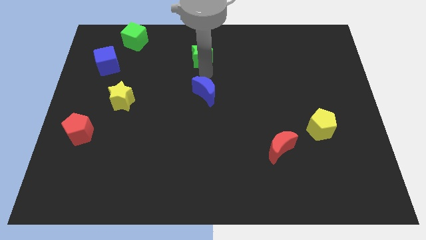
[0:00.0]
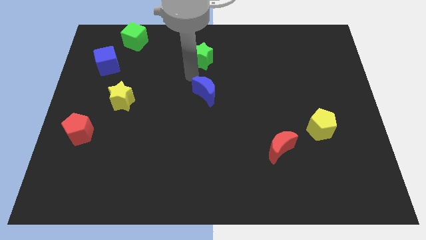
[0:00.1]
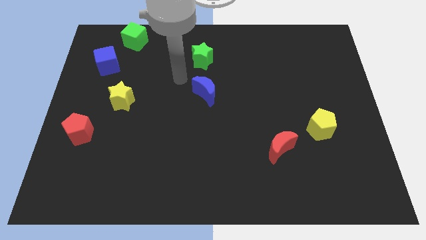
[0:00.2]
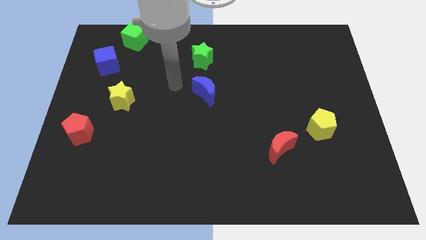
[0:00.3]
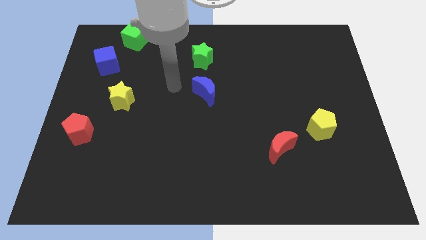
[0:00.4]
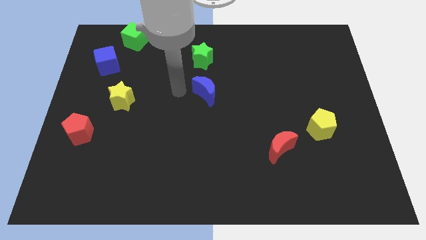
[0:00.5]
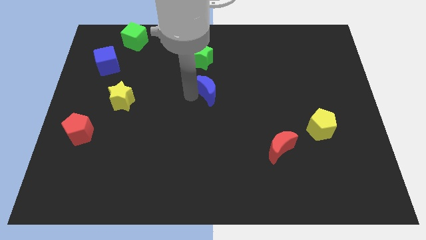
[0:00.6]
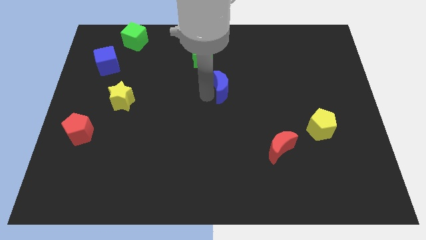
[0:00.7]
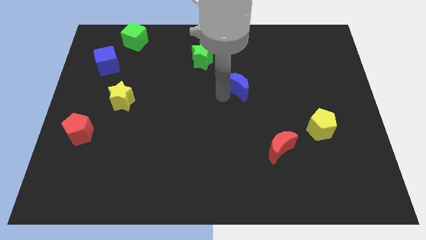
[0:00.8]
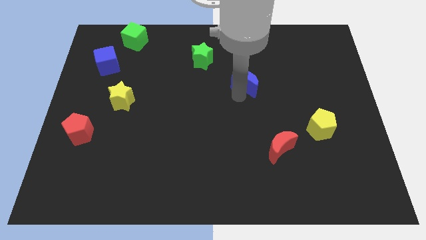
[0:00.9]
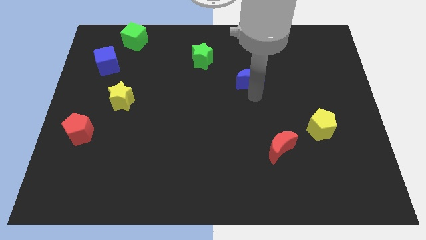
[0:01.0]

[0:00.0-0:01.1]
move blue moon to the bottom right of green star

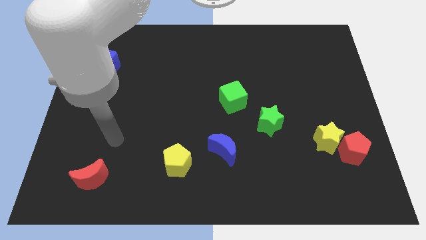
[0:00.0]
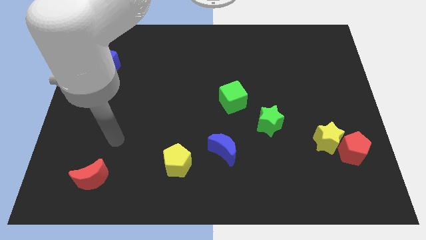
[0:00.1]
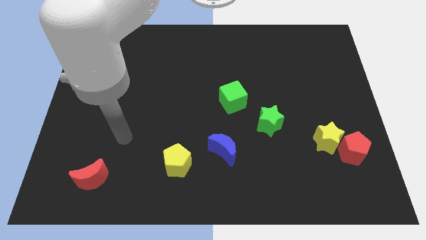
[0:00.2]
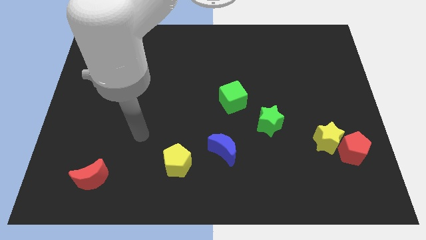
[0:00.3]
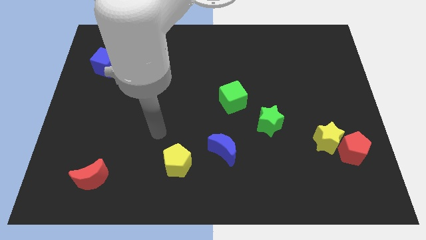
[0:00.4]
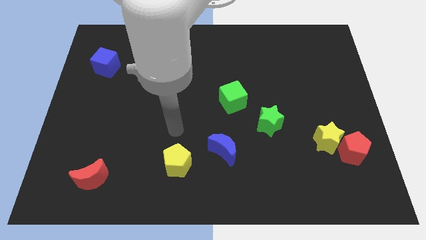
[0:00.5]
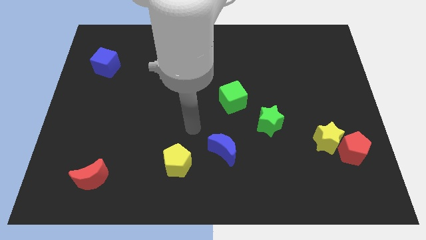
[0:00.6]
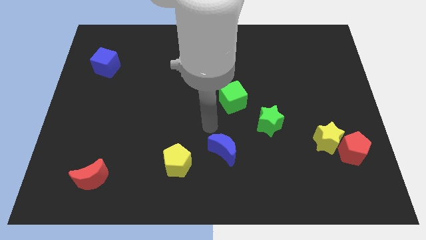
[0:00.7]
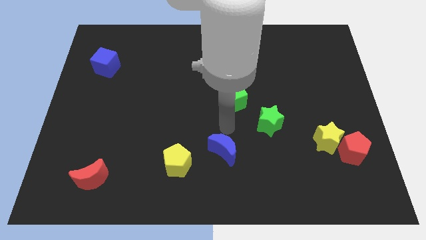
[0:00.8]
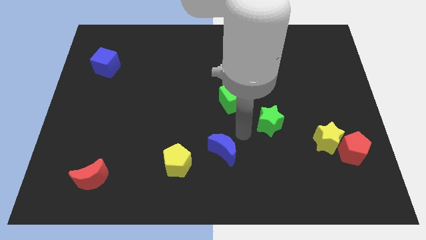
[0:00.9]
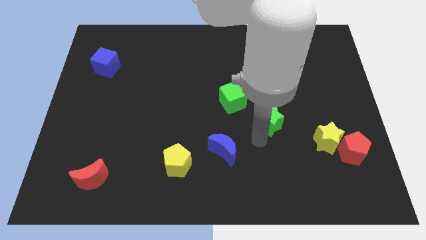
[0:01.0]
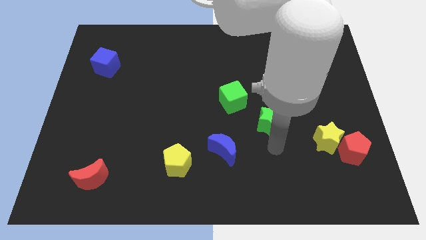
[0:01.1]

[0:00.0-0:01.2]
point your arm to the green star

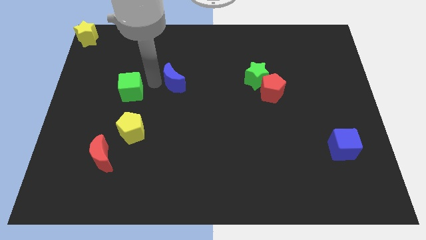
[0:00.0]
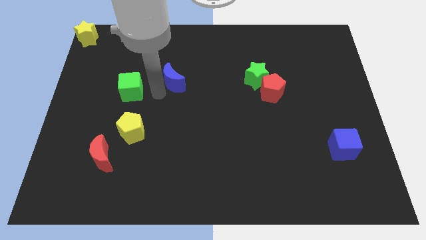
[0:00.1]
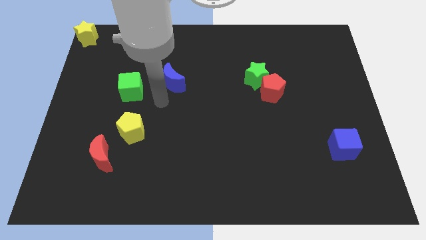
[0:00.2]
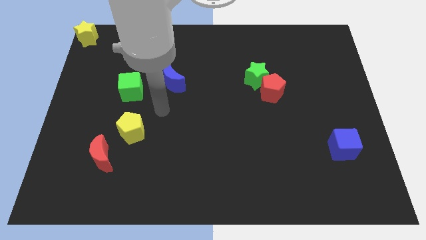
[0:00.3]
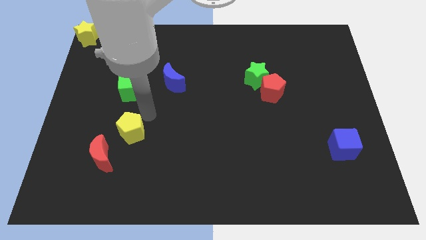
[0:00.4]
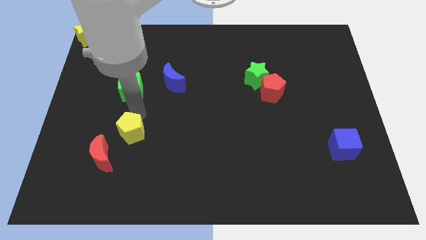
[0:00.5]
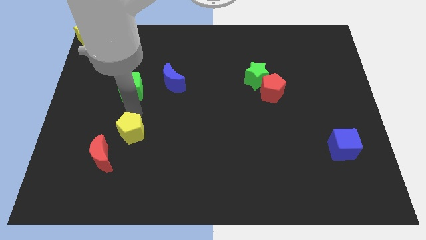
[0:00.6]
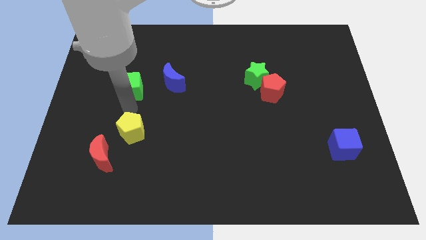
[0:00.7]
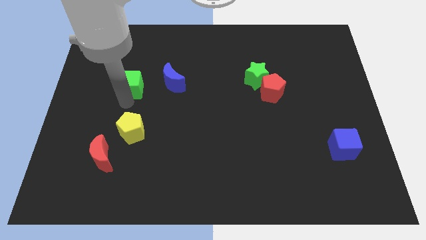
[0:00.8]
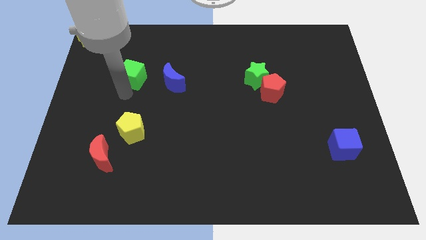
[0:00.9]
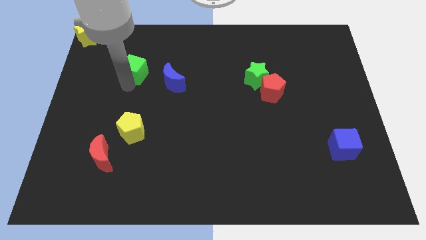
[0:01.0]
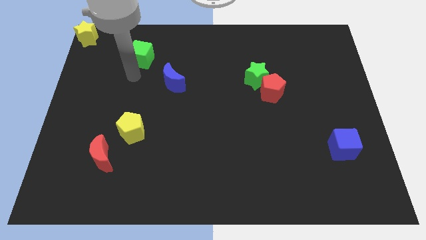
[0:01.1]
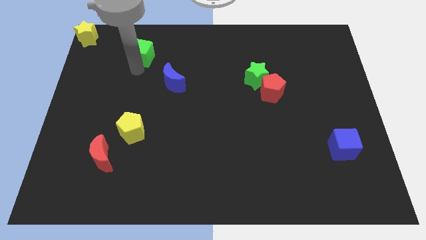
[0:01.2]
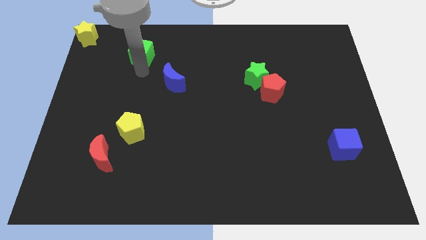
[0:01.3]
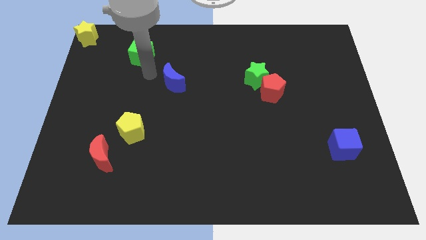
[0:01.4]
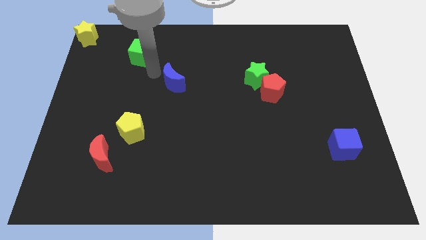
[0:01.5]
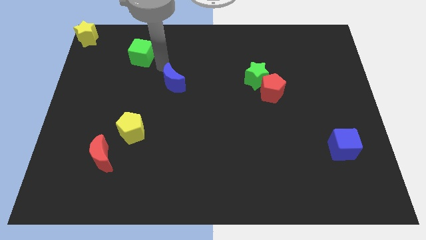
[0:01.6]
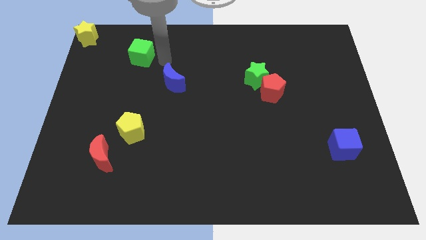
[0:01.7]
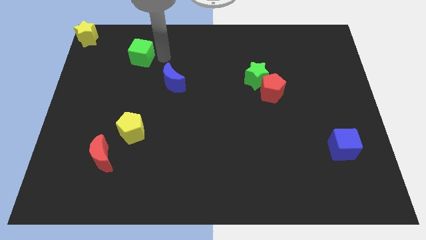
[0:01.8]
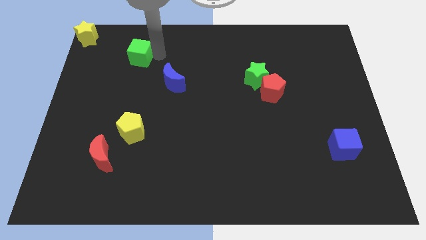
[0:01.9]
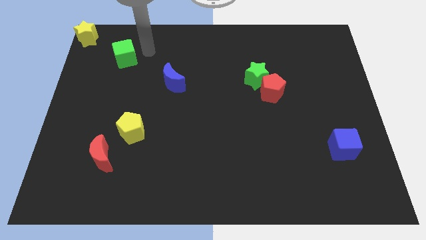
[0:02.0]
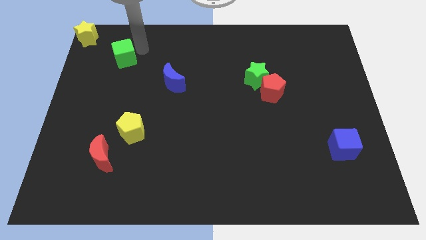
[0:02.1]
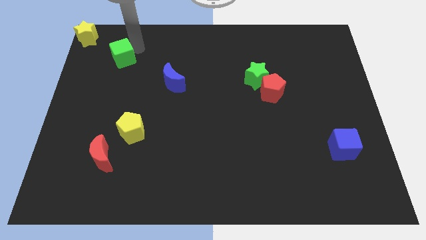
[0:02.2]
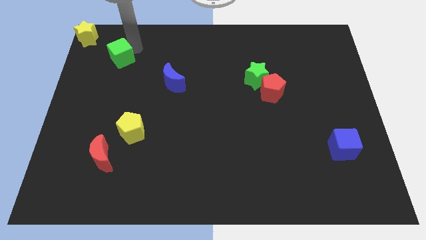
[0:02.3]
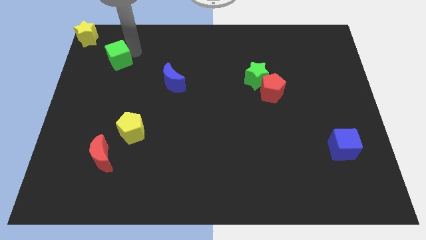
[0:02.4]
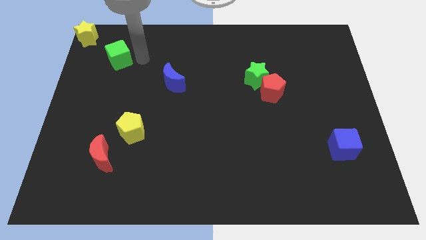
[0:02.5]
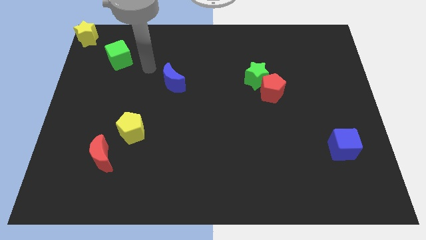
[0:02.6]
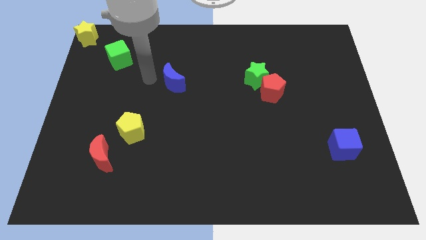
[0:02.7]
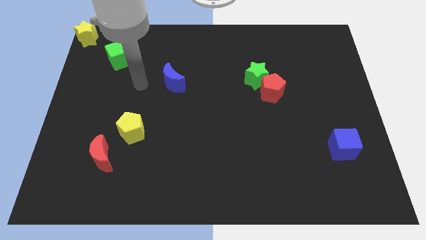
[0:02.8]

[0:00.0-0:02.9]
move the green cube in between the yellow star and blue crescent

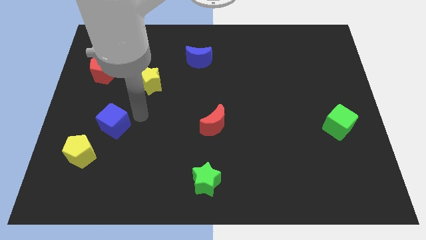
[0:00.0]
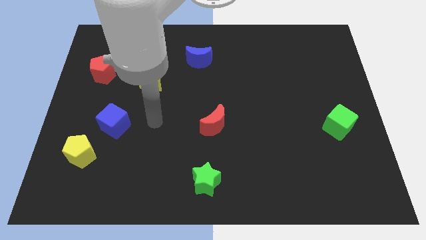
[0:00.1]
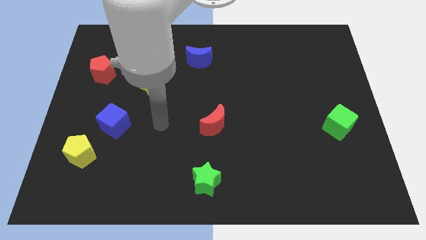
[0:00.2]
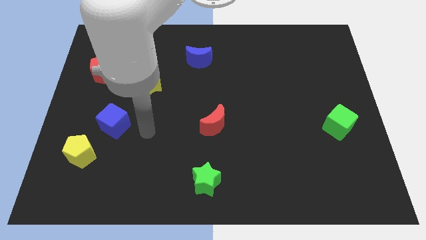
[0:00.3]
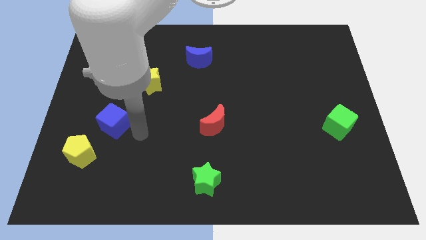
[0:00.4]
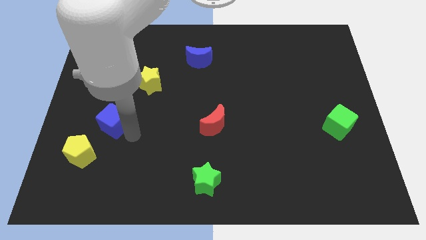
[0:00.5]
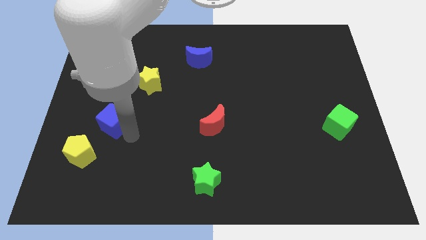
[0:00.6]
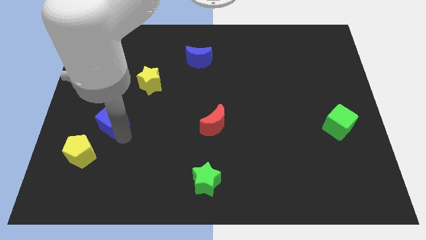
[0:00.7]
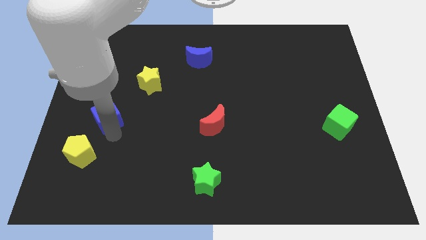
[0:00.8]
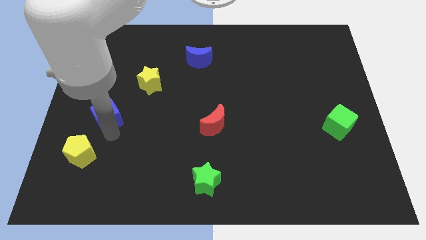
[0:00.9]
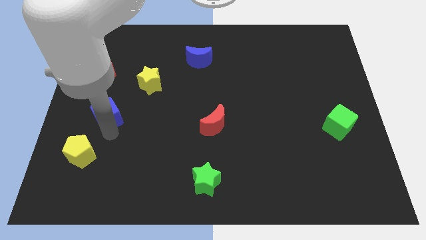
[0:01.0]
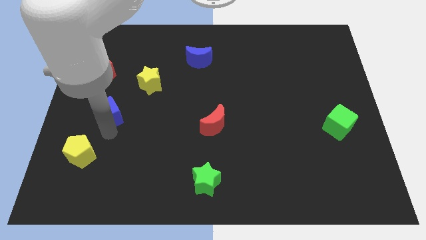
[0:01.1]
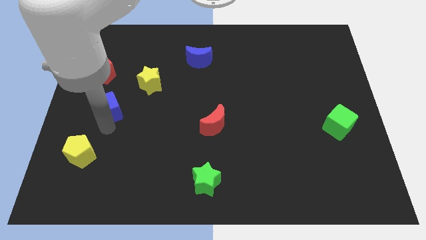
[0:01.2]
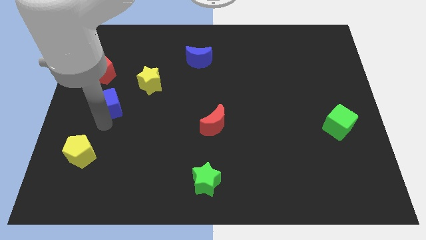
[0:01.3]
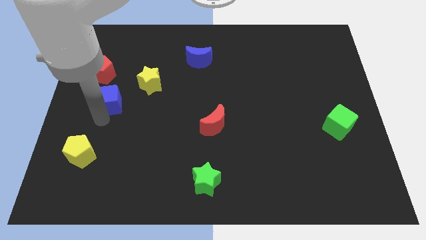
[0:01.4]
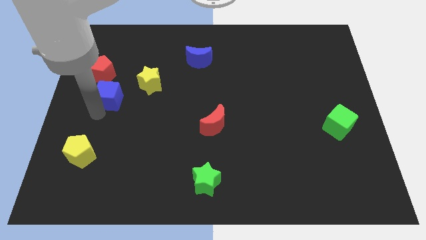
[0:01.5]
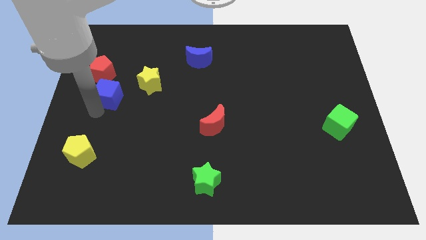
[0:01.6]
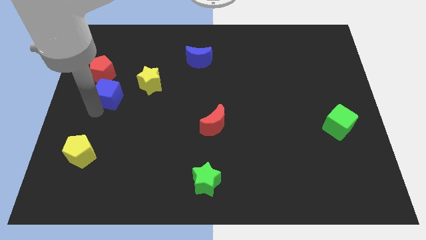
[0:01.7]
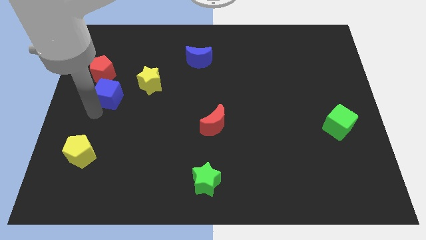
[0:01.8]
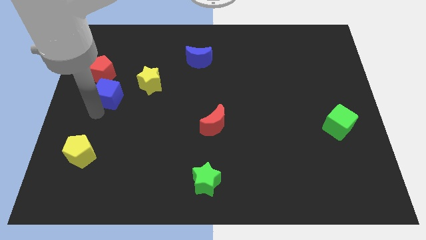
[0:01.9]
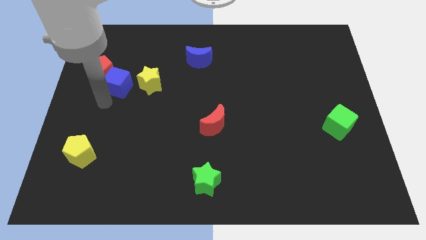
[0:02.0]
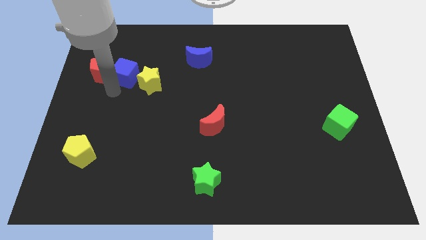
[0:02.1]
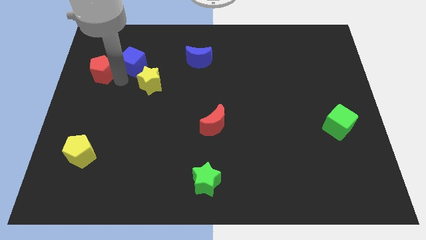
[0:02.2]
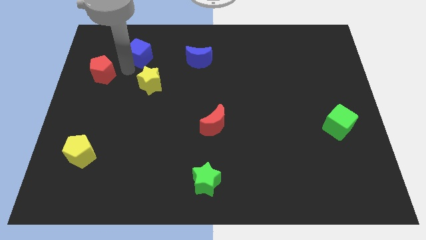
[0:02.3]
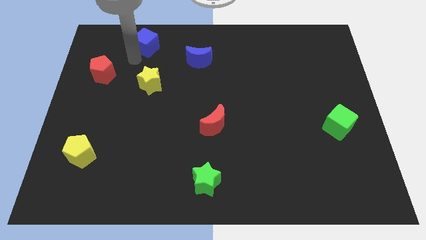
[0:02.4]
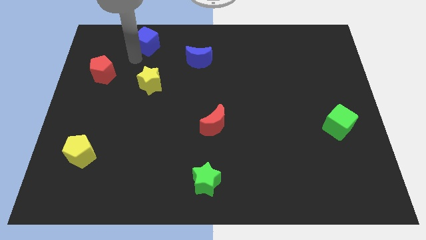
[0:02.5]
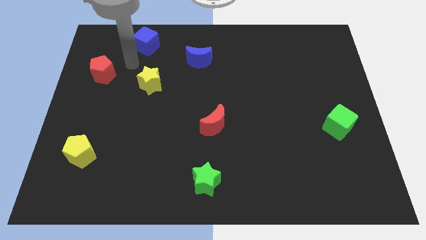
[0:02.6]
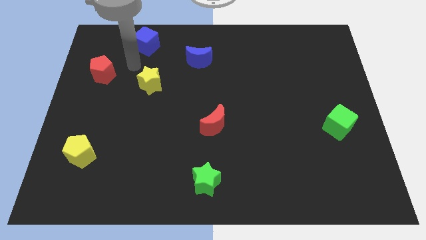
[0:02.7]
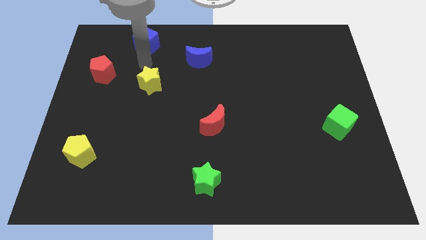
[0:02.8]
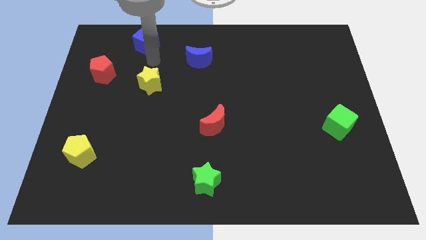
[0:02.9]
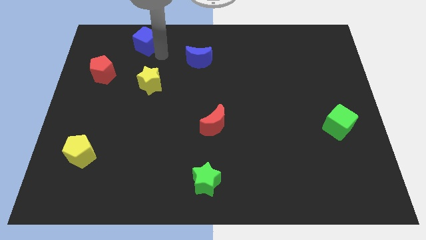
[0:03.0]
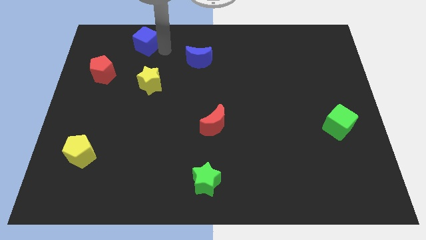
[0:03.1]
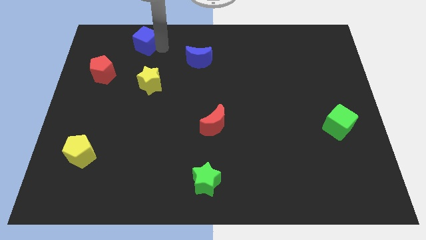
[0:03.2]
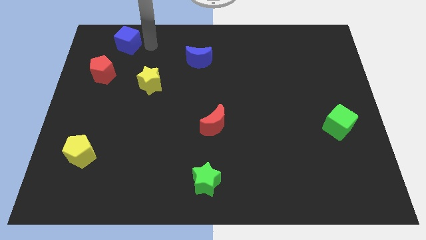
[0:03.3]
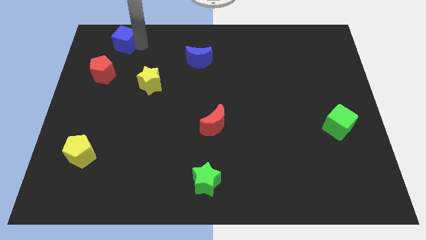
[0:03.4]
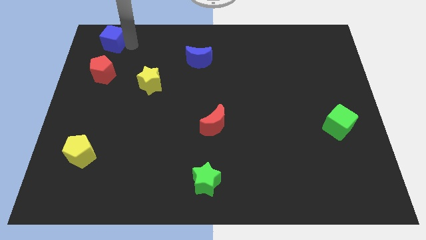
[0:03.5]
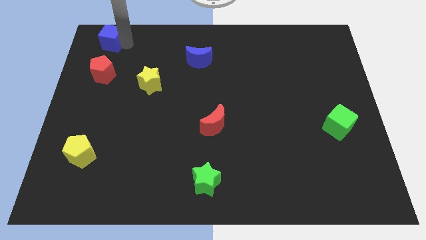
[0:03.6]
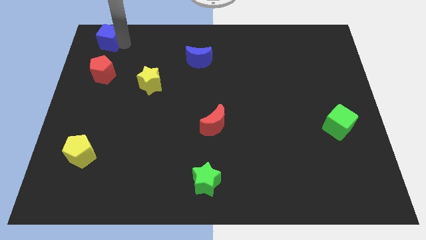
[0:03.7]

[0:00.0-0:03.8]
place the blue cube above the red pentagon
